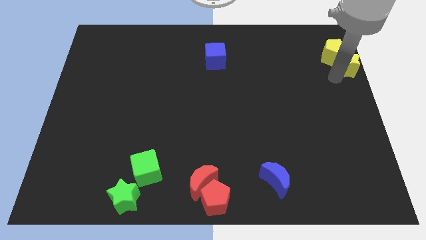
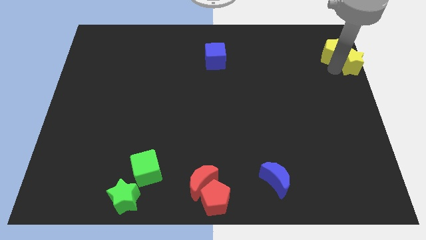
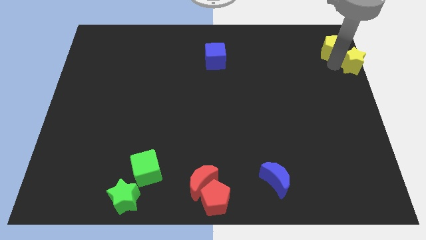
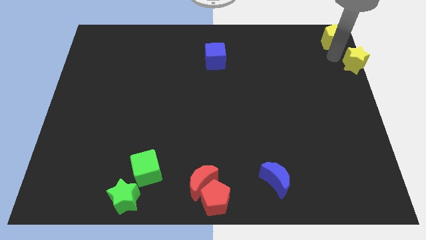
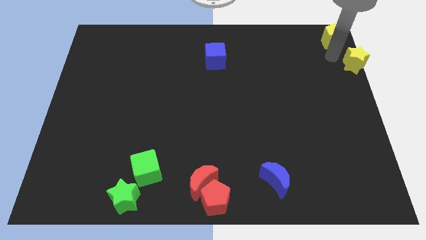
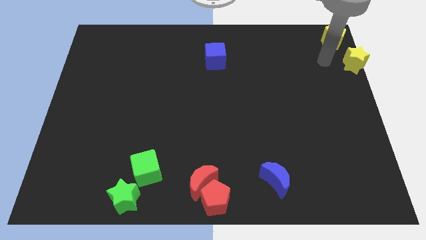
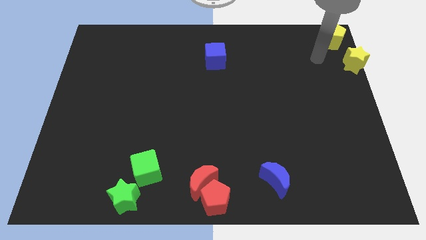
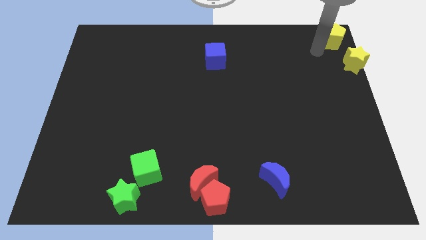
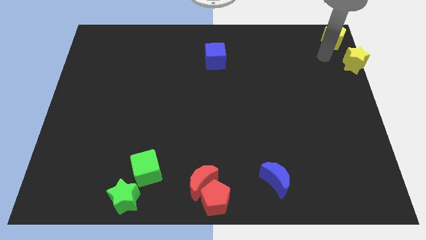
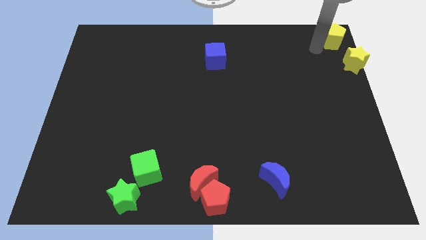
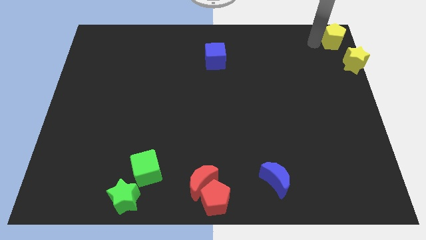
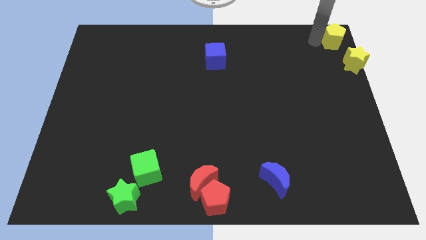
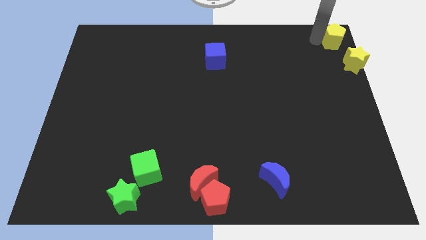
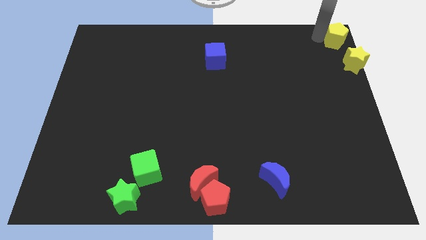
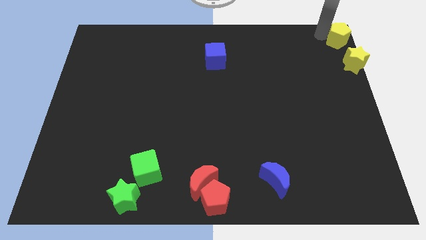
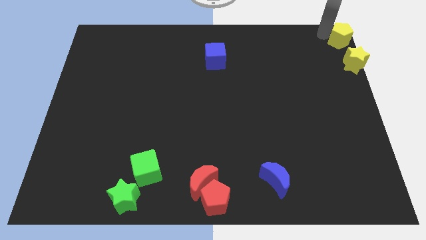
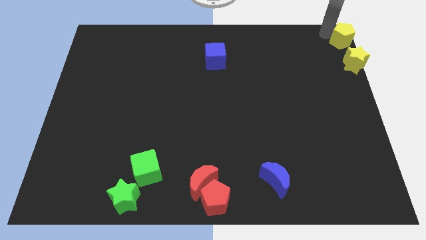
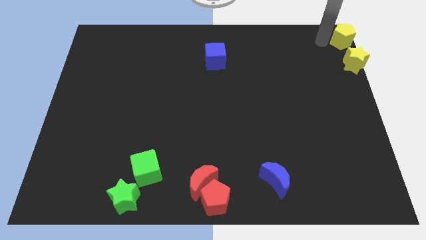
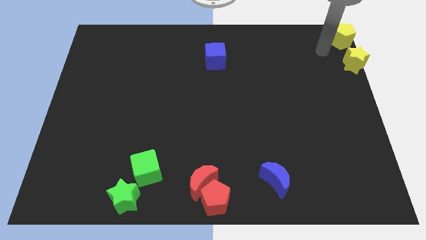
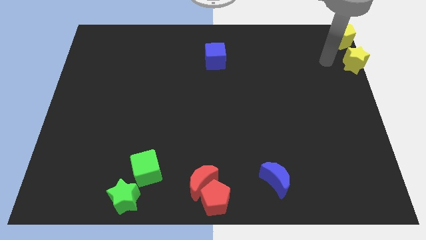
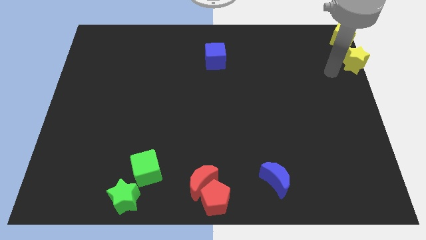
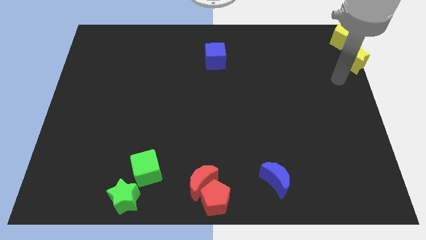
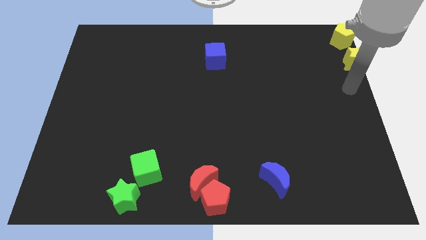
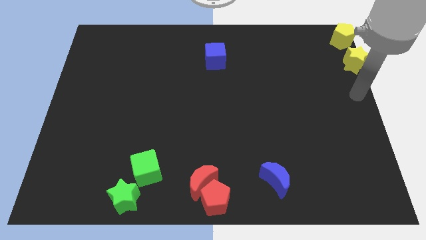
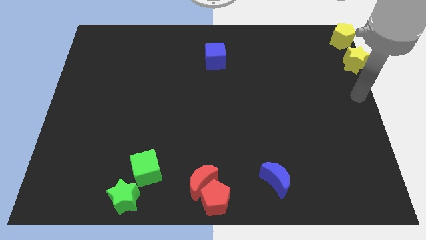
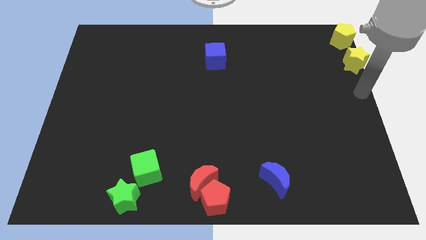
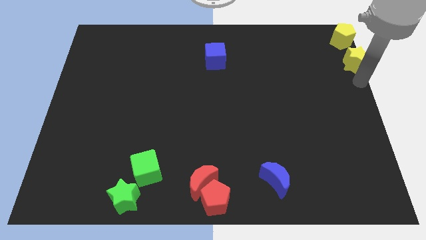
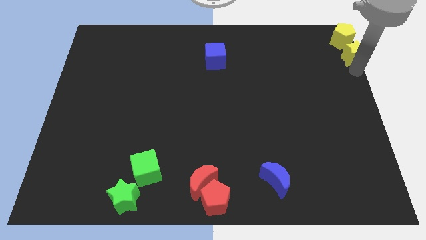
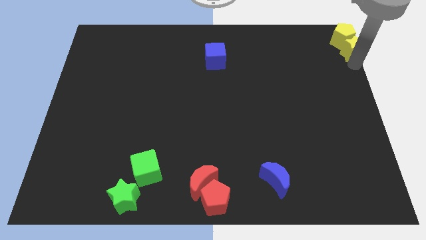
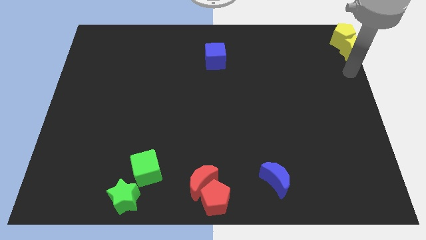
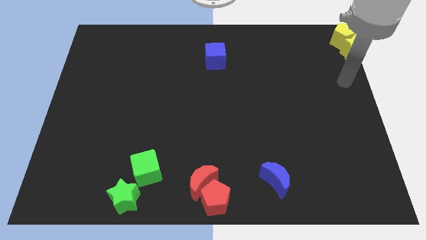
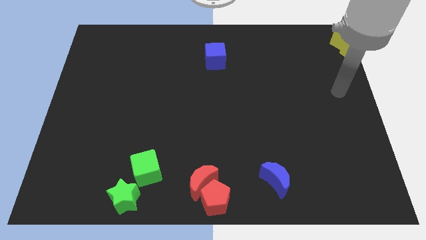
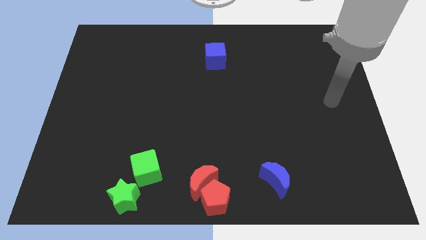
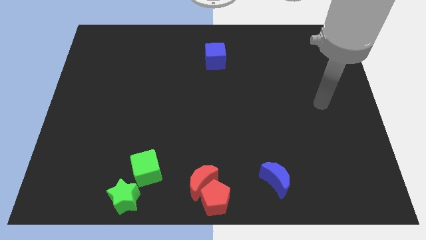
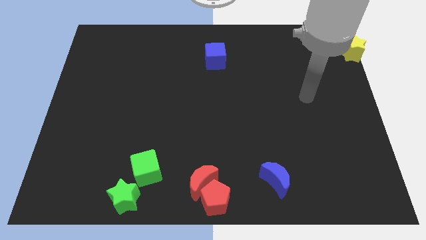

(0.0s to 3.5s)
push the yellow blocks to the top right corner of the board

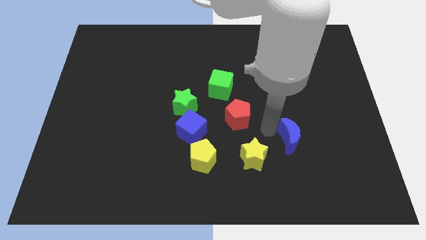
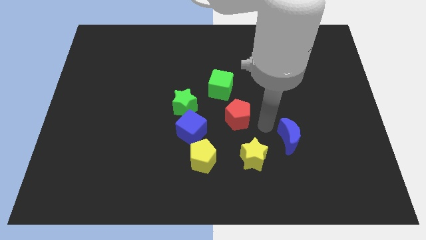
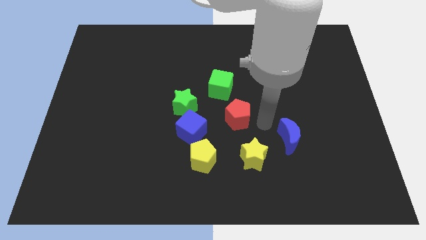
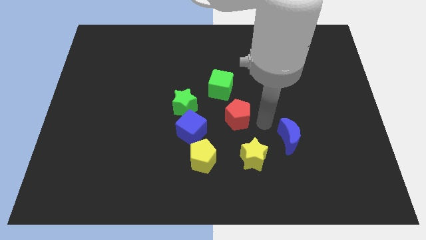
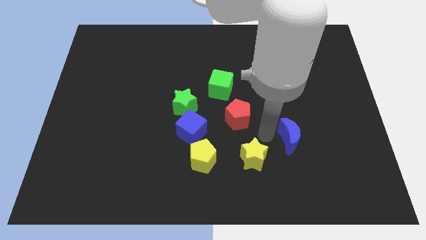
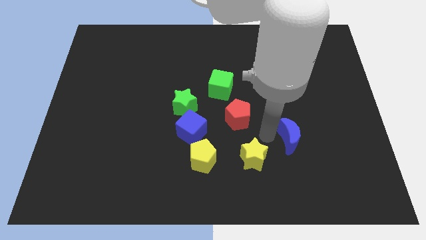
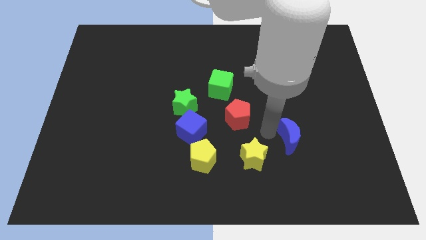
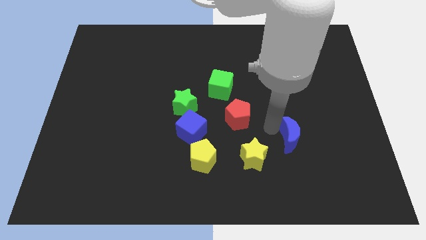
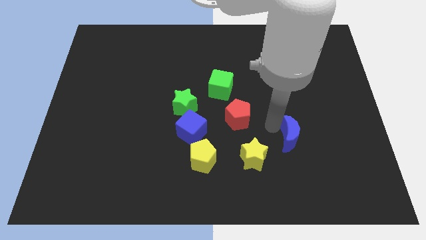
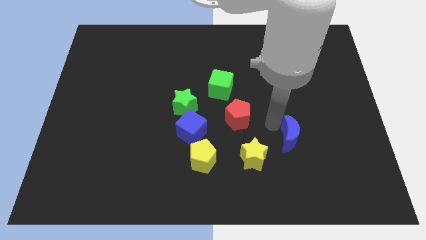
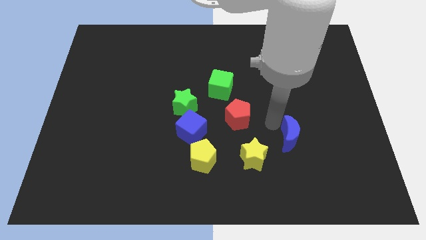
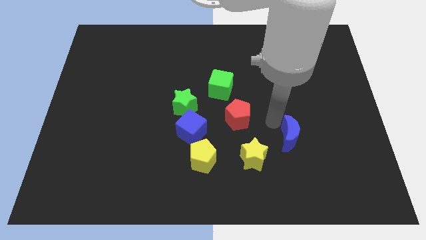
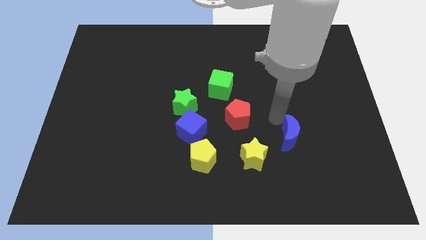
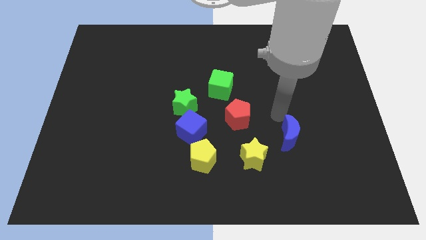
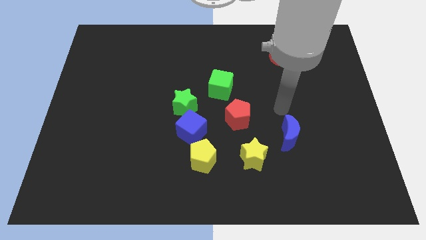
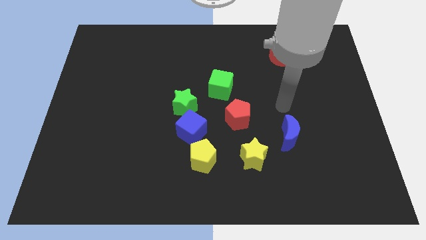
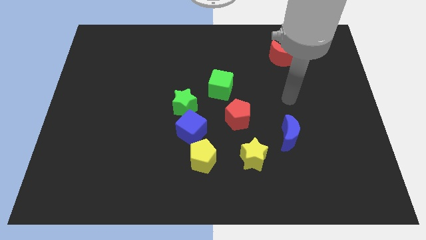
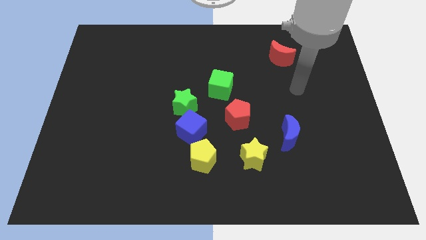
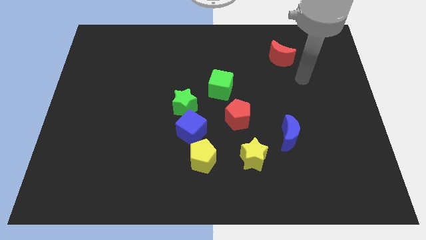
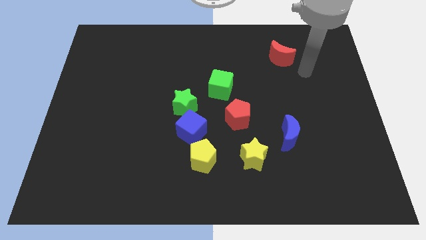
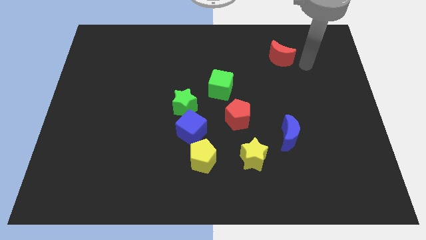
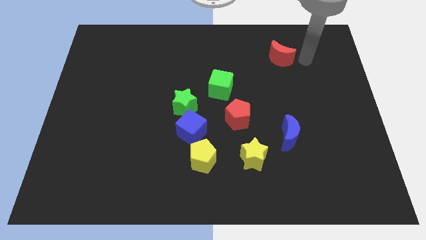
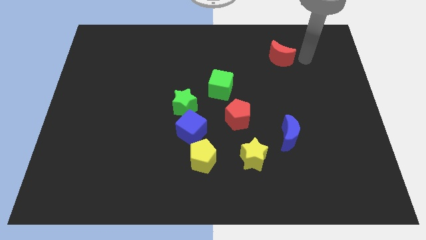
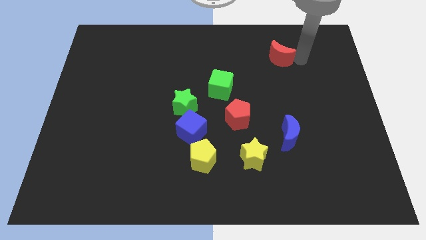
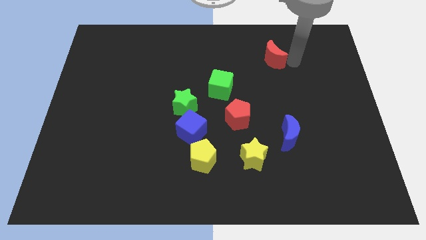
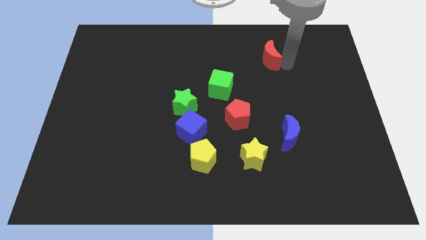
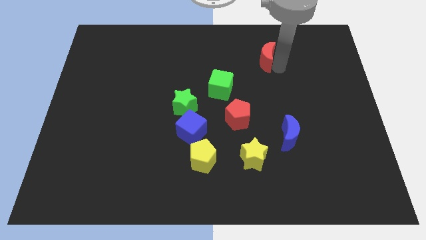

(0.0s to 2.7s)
move your arm away from blue moon

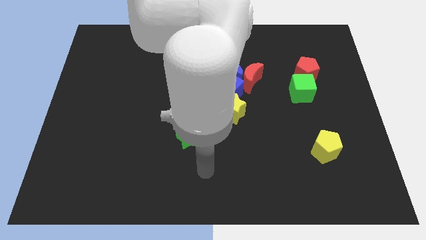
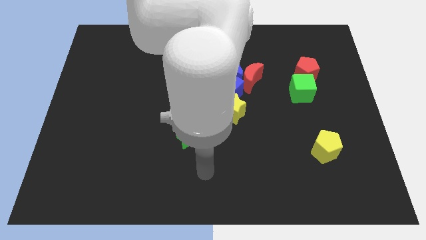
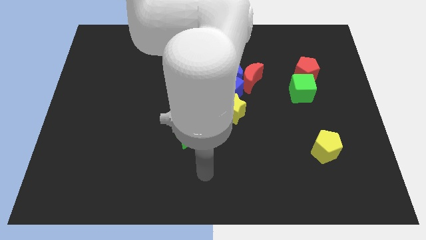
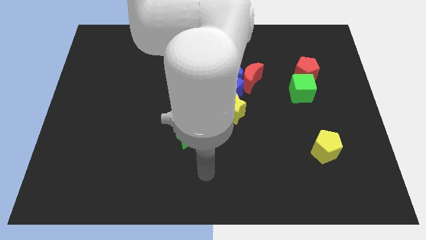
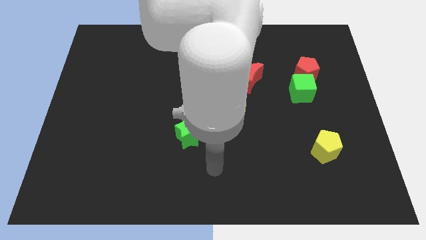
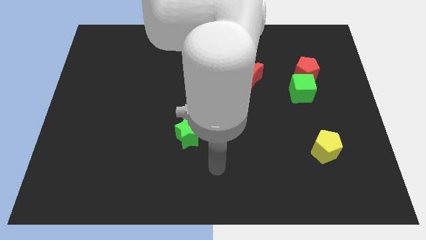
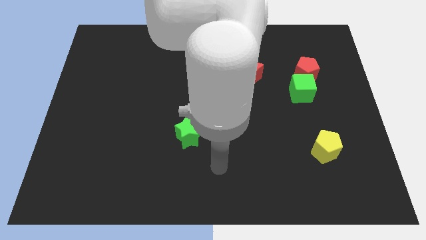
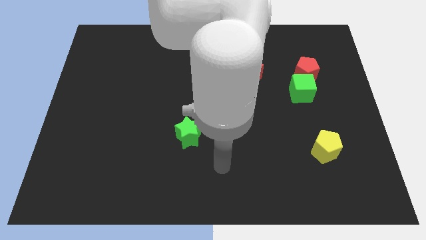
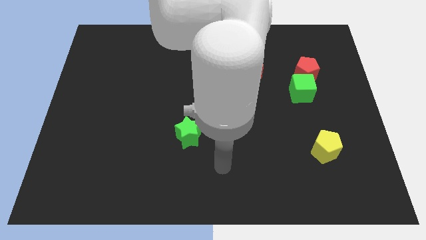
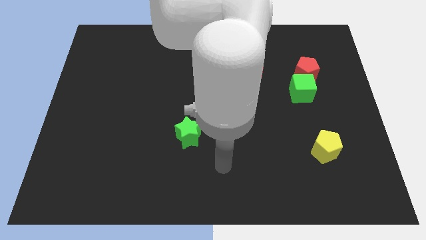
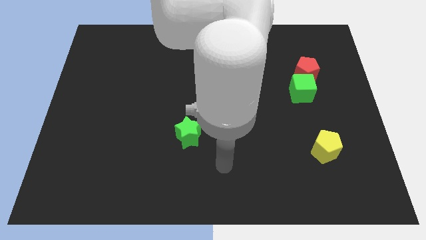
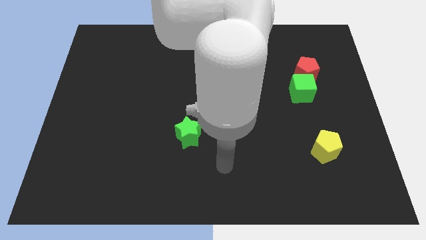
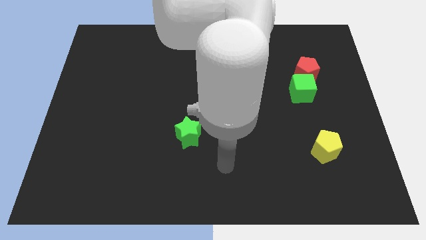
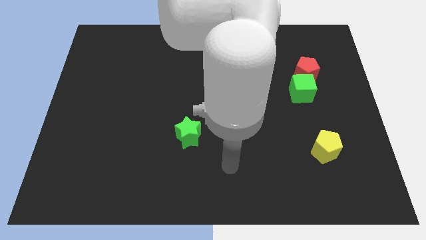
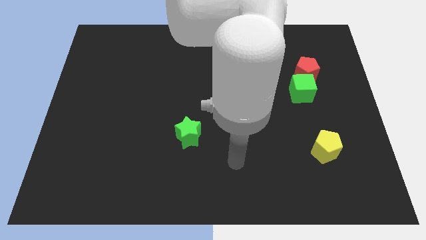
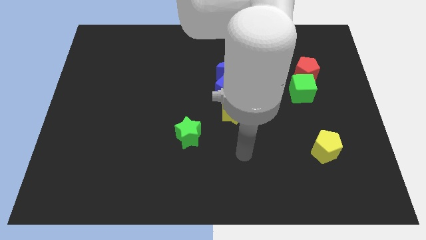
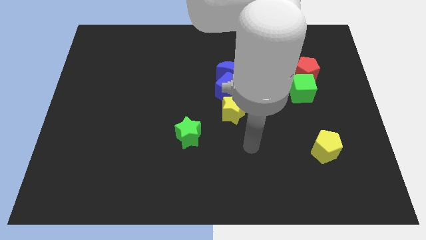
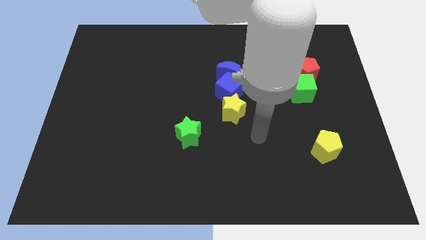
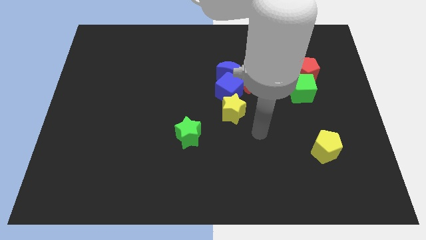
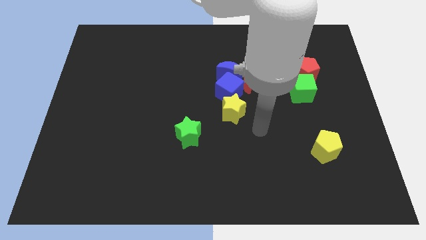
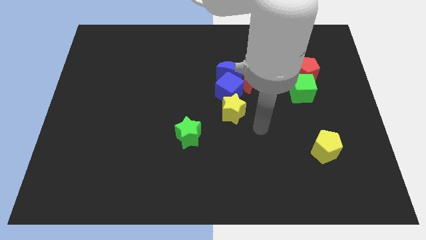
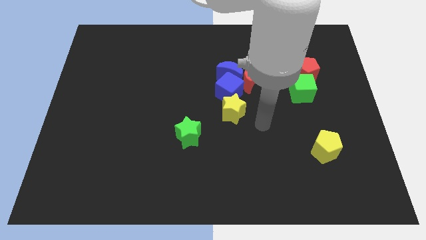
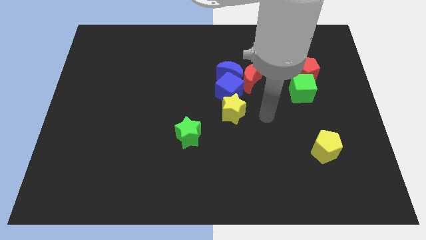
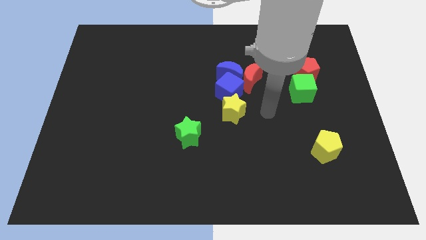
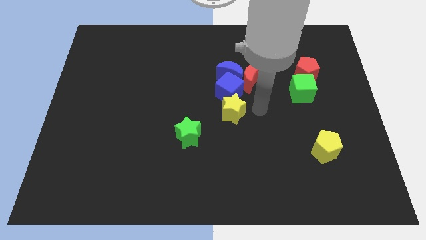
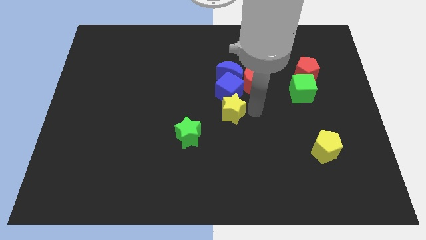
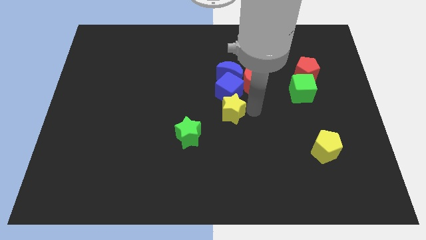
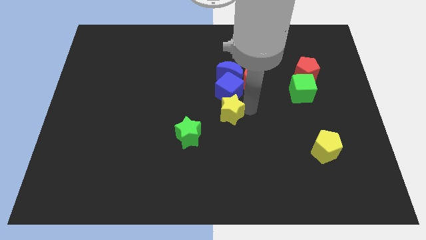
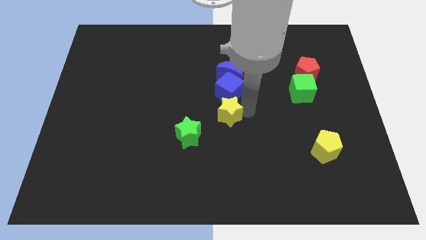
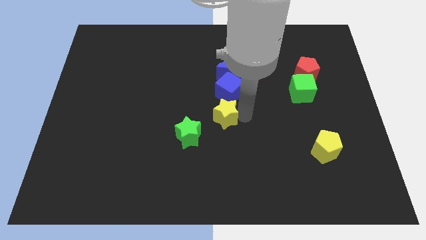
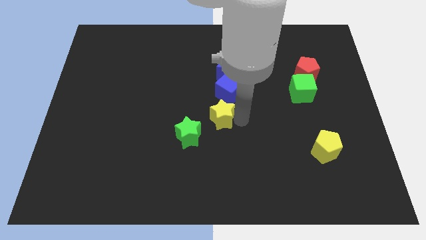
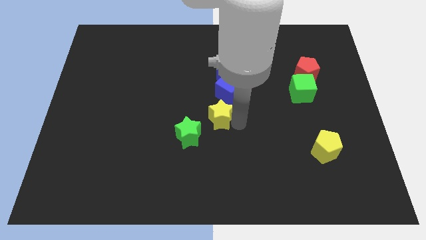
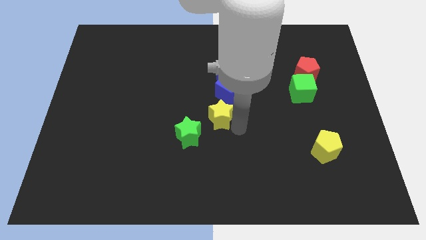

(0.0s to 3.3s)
push the yellow star towards the green star
